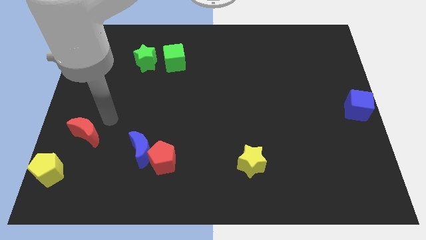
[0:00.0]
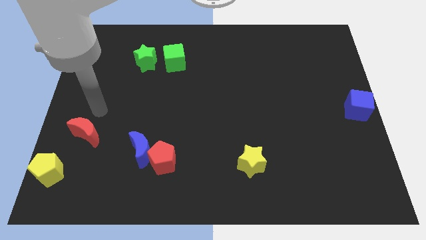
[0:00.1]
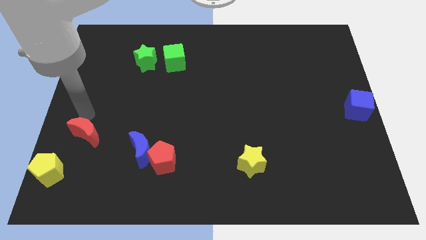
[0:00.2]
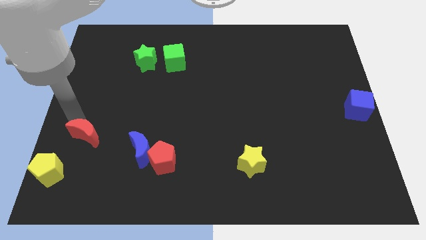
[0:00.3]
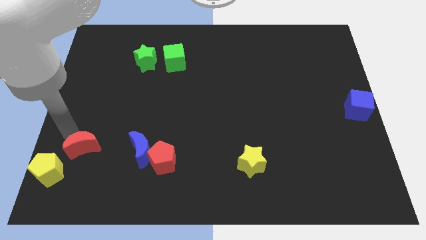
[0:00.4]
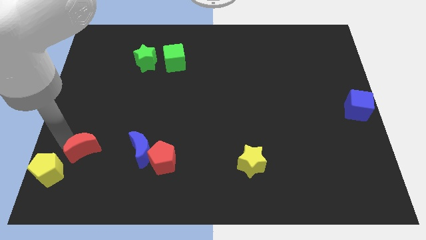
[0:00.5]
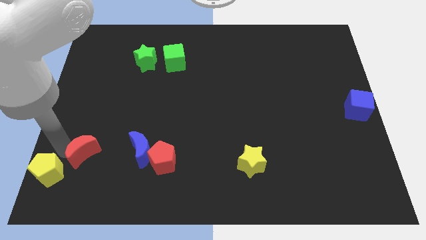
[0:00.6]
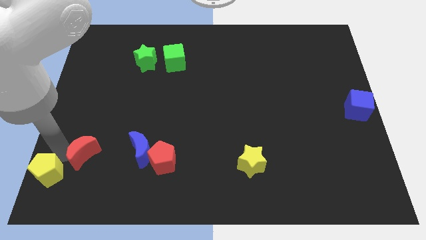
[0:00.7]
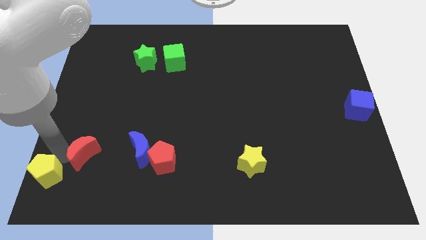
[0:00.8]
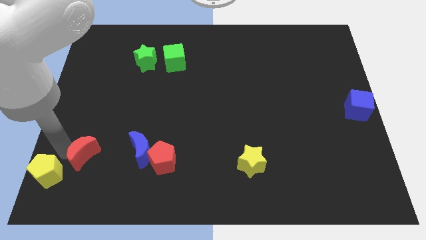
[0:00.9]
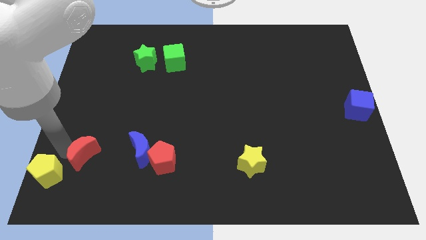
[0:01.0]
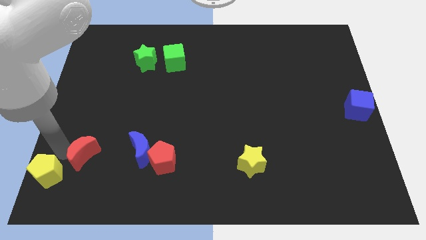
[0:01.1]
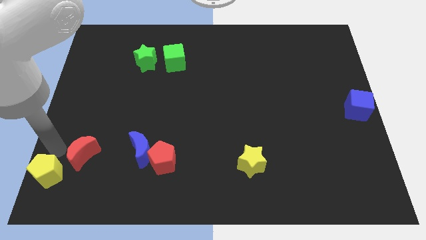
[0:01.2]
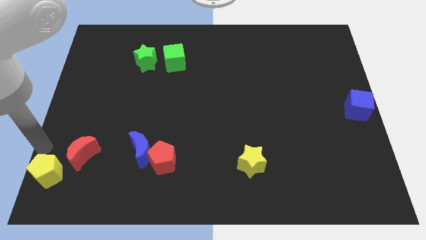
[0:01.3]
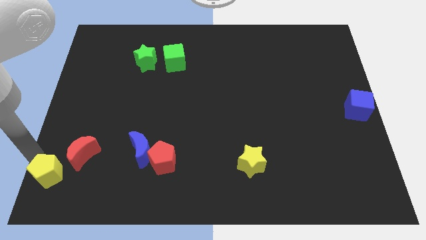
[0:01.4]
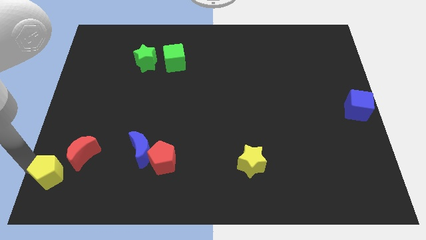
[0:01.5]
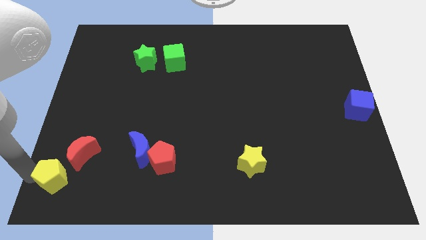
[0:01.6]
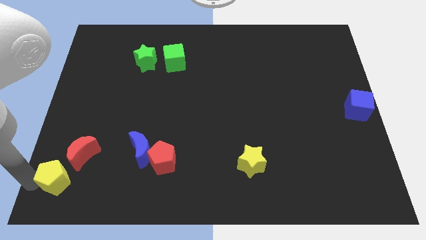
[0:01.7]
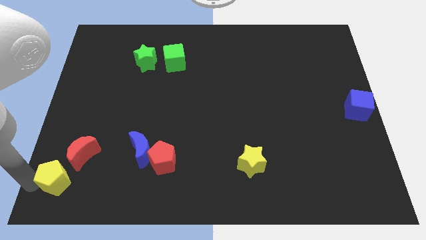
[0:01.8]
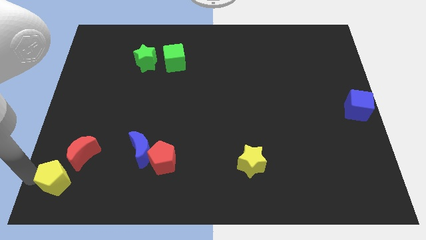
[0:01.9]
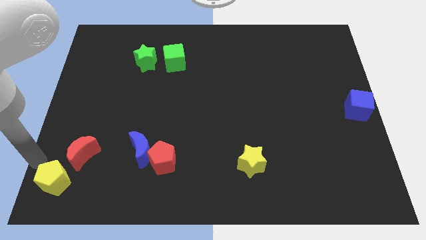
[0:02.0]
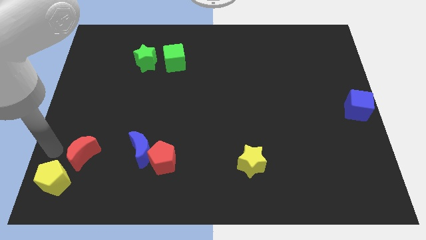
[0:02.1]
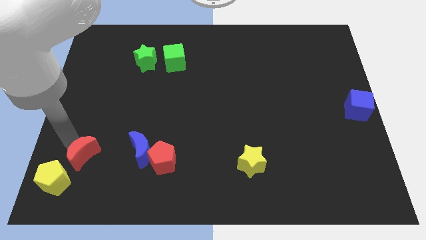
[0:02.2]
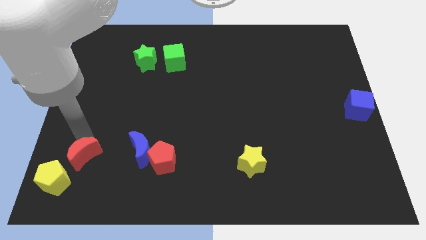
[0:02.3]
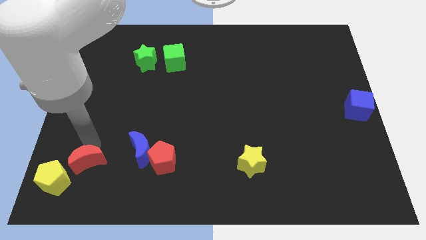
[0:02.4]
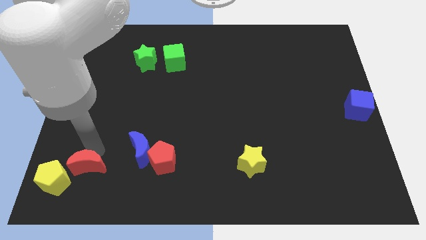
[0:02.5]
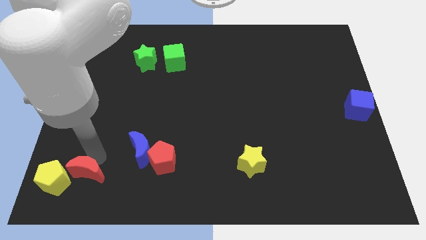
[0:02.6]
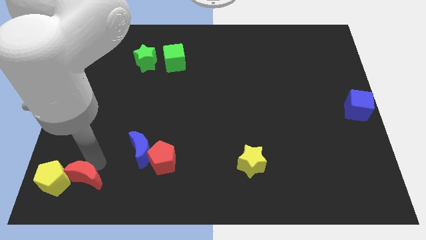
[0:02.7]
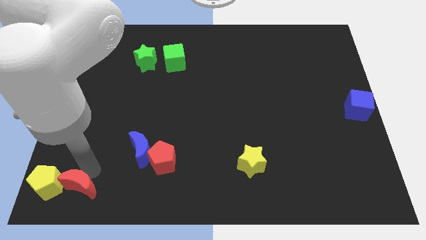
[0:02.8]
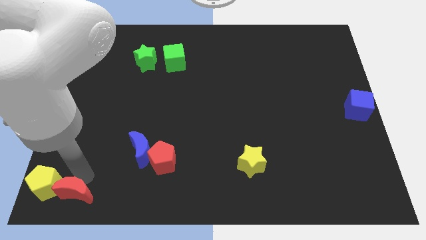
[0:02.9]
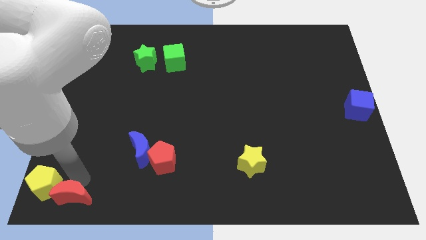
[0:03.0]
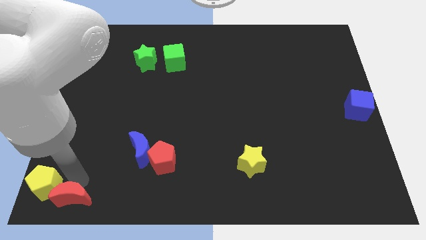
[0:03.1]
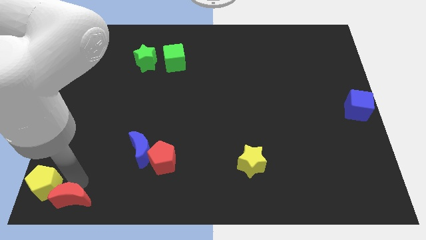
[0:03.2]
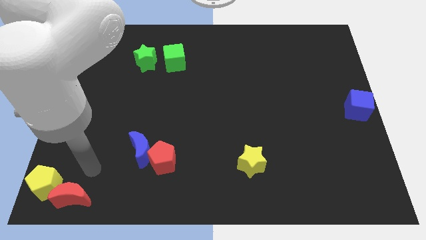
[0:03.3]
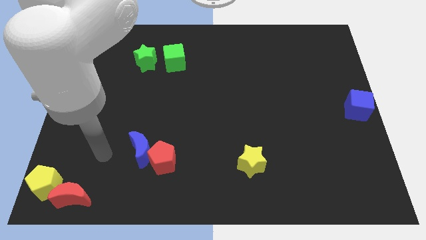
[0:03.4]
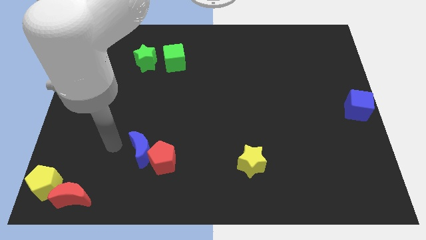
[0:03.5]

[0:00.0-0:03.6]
push the yellow pentagon and red moon to the bottom left corner together

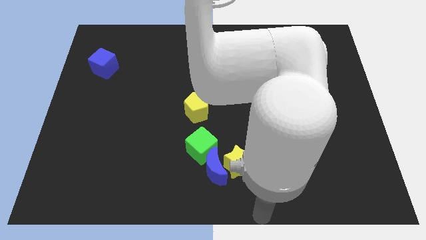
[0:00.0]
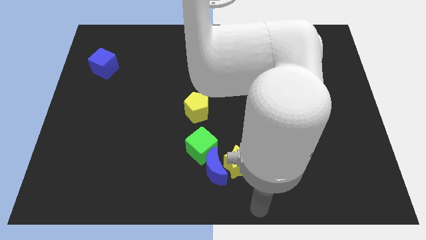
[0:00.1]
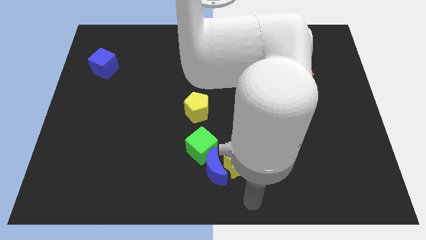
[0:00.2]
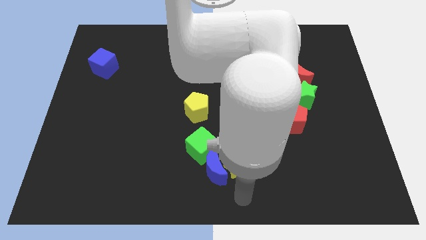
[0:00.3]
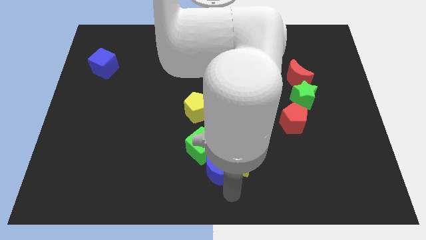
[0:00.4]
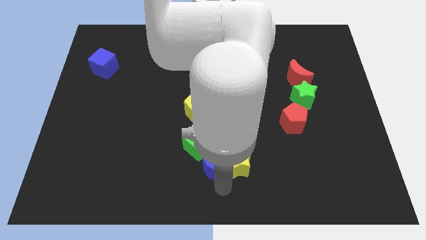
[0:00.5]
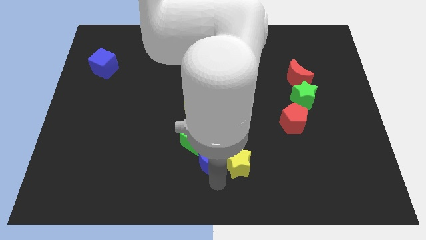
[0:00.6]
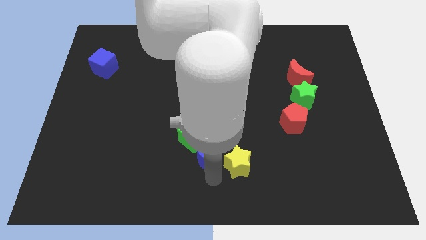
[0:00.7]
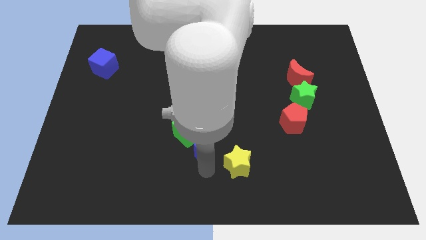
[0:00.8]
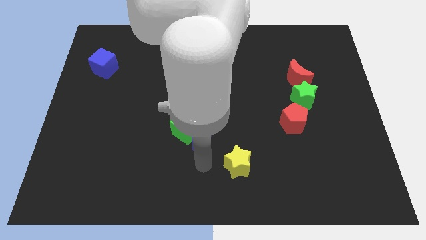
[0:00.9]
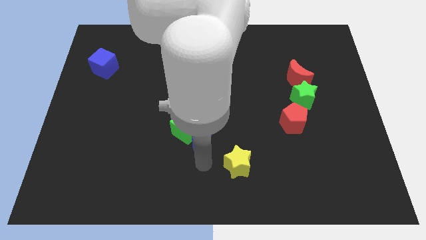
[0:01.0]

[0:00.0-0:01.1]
push the green cube and the blue moon towards the bottom left of the yellow pentagon

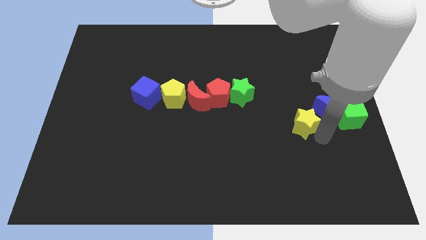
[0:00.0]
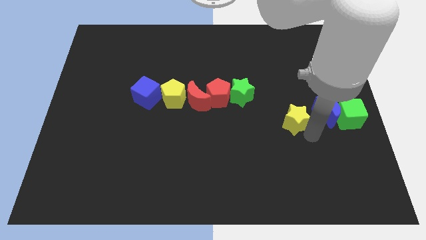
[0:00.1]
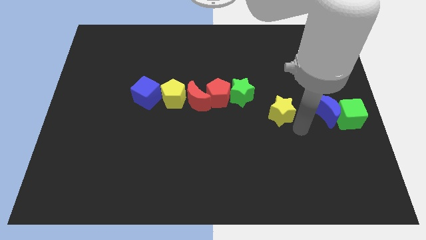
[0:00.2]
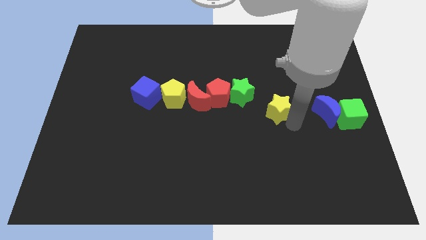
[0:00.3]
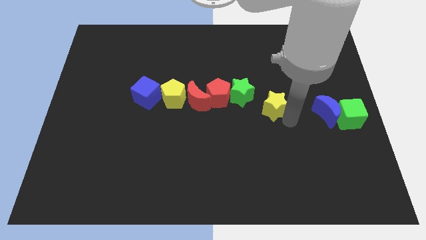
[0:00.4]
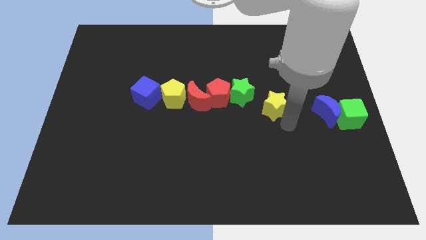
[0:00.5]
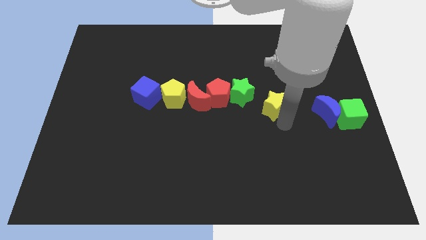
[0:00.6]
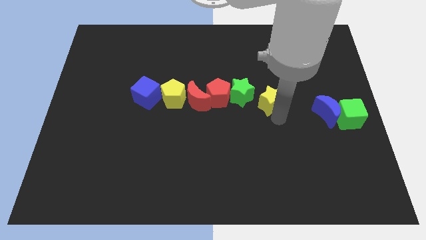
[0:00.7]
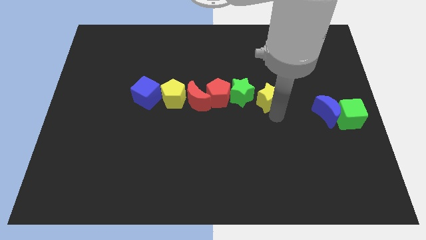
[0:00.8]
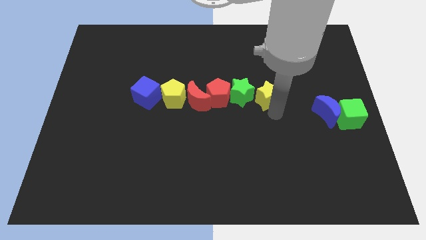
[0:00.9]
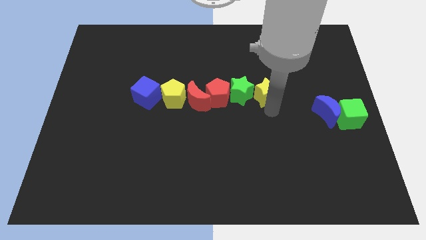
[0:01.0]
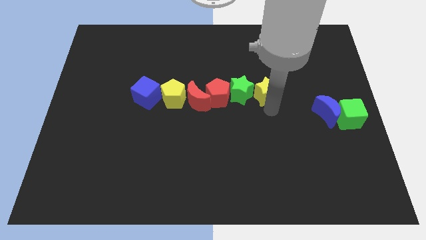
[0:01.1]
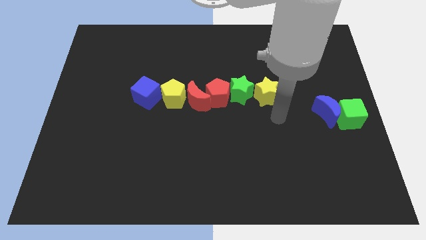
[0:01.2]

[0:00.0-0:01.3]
push the yellow star right to the green star

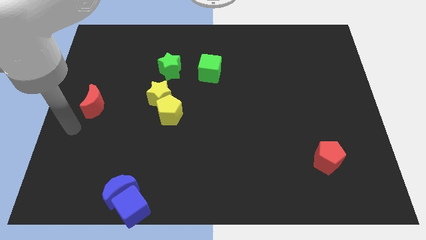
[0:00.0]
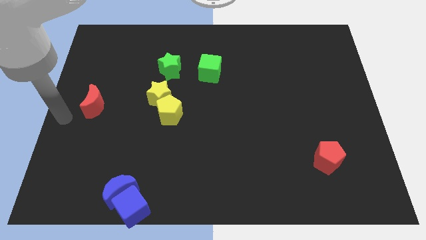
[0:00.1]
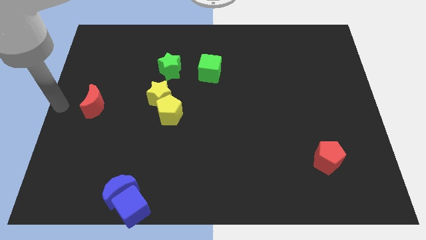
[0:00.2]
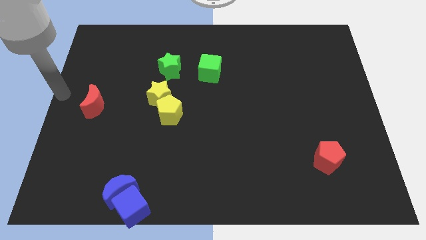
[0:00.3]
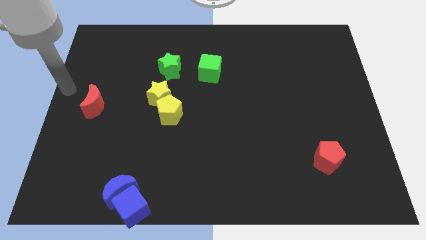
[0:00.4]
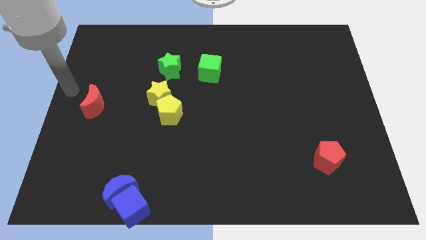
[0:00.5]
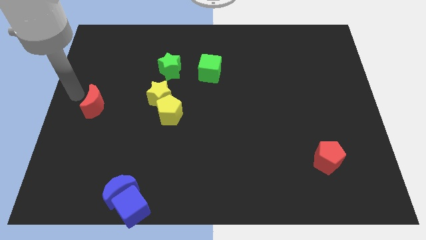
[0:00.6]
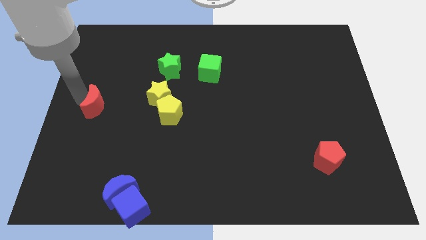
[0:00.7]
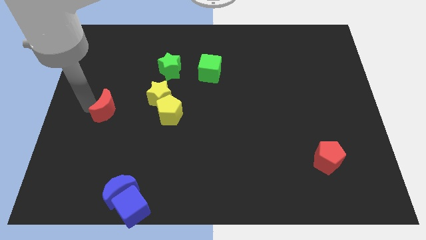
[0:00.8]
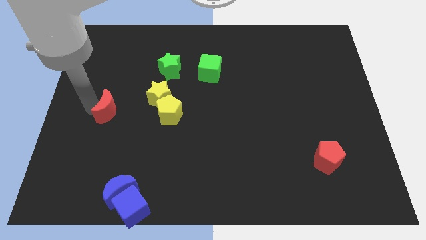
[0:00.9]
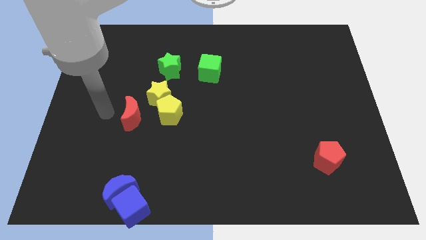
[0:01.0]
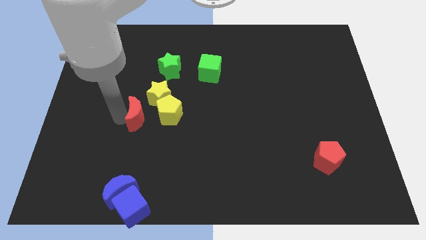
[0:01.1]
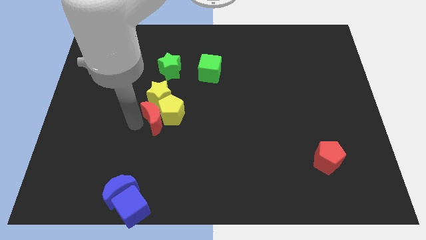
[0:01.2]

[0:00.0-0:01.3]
place red moon into the yellow pentagon

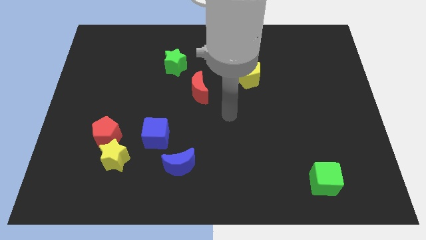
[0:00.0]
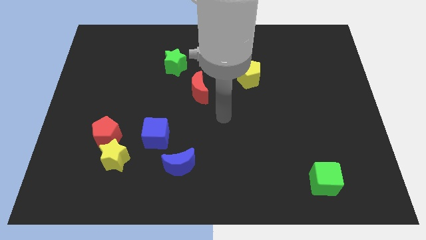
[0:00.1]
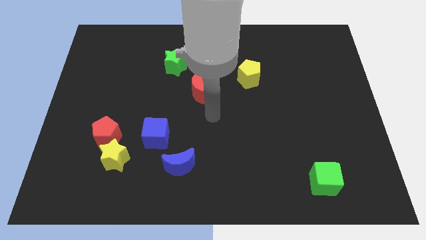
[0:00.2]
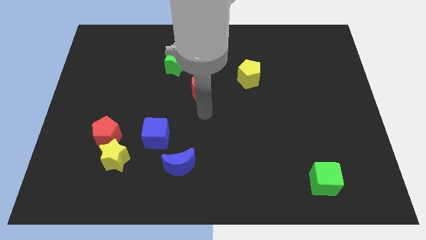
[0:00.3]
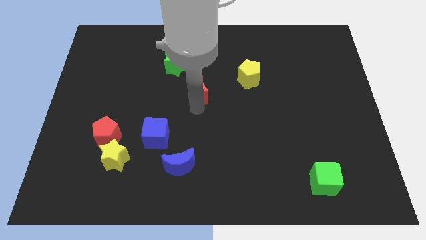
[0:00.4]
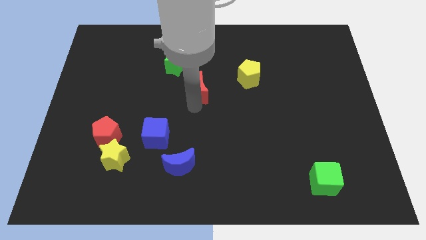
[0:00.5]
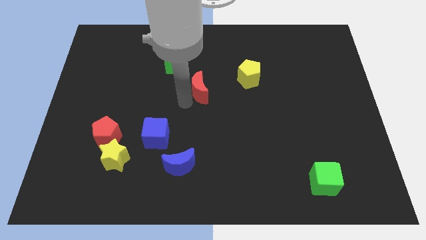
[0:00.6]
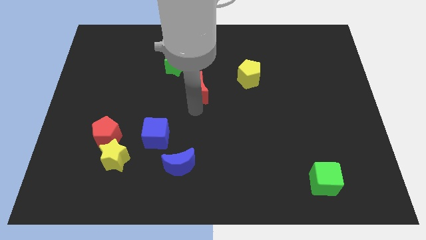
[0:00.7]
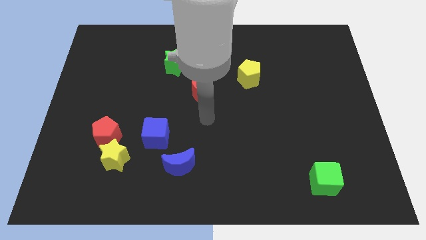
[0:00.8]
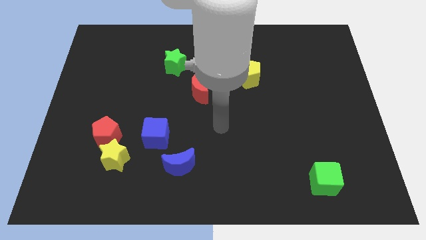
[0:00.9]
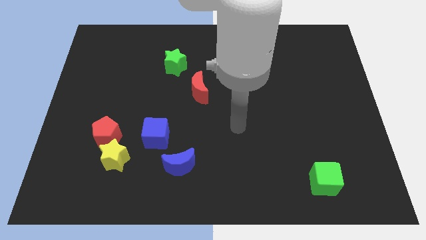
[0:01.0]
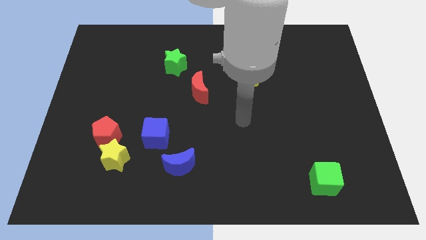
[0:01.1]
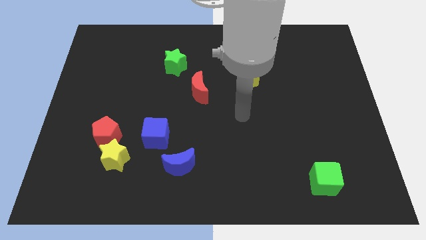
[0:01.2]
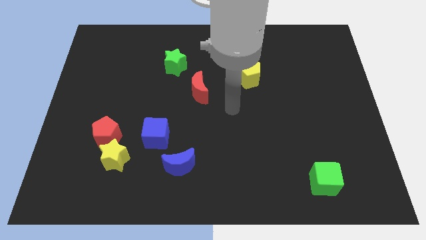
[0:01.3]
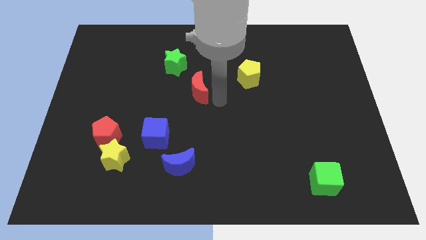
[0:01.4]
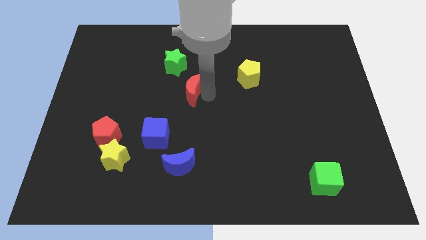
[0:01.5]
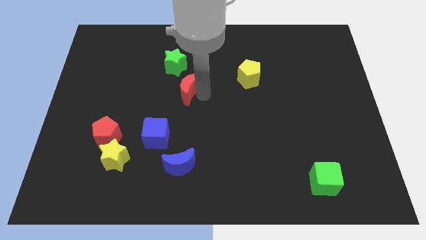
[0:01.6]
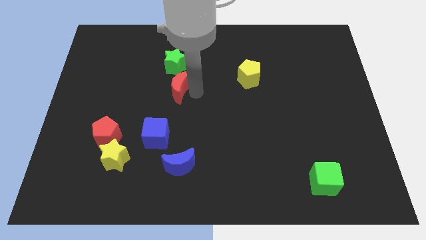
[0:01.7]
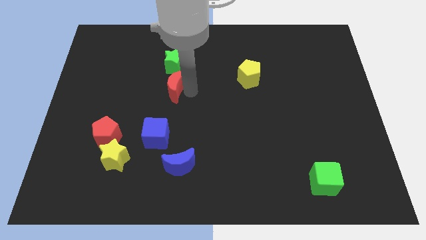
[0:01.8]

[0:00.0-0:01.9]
move the red crescent towards the bottom of the green star
